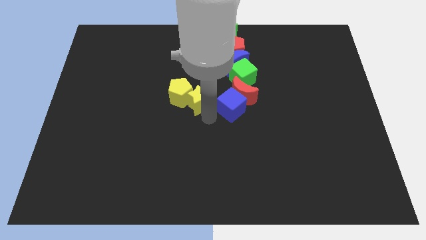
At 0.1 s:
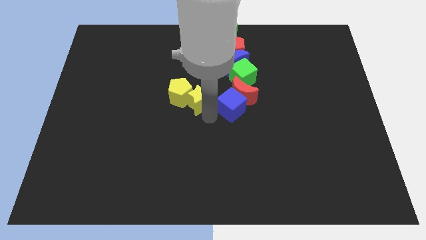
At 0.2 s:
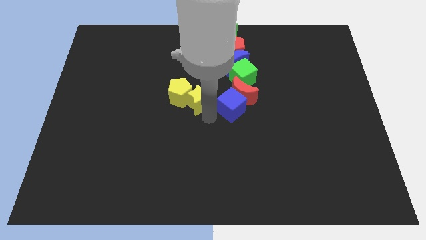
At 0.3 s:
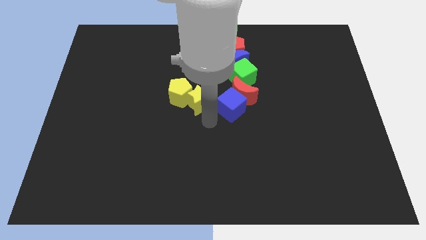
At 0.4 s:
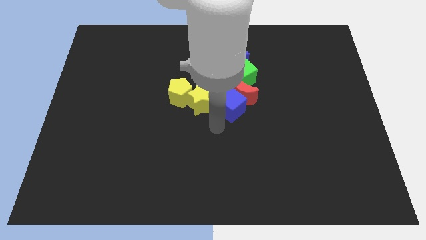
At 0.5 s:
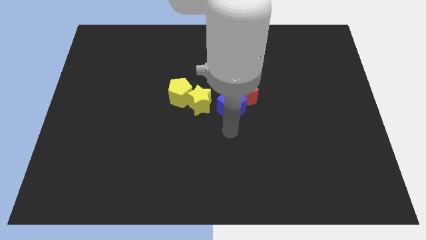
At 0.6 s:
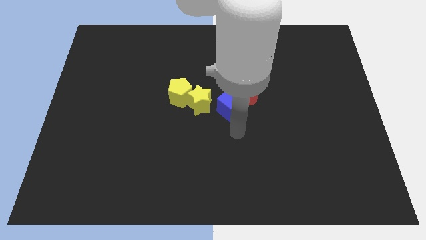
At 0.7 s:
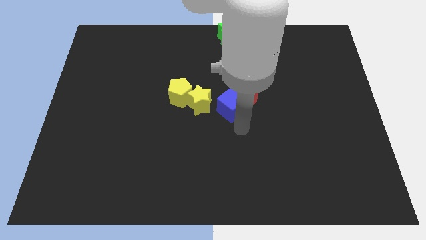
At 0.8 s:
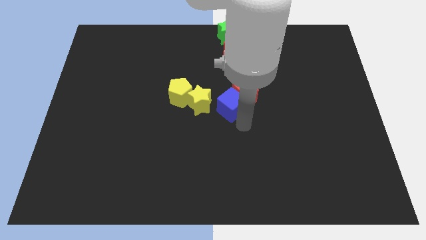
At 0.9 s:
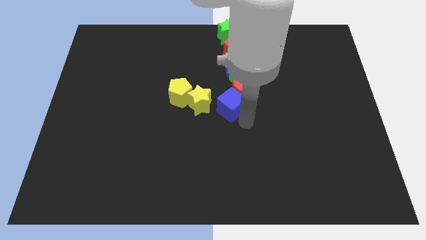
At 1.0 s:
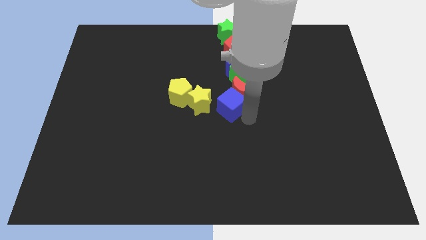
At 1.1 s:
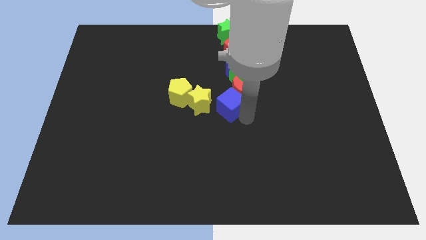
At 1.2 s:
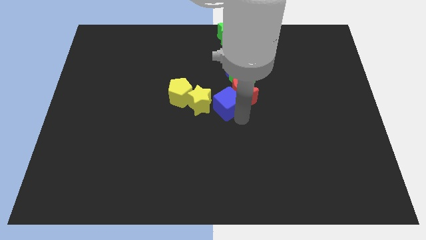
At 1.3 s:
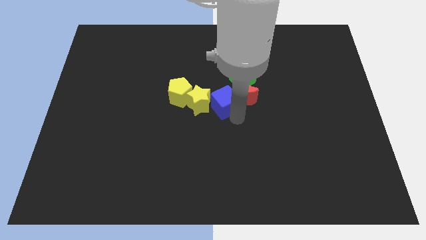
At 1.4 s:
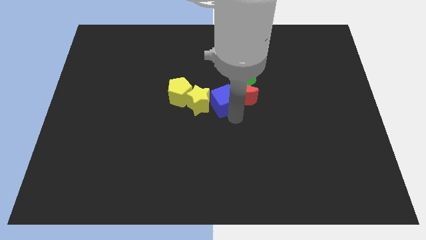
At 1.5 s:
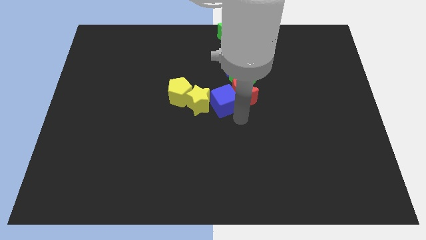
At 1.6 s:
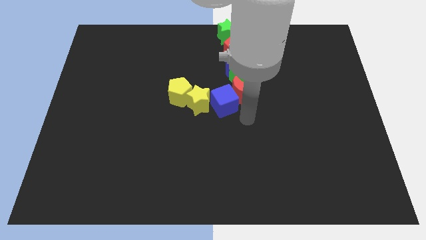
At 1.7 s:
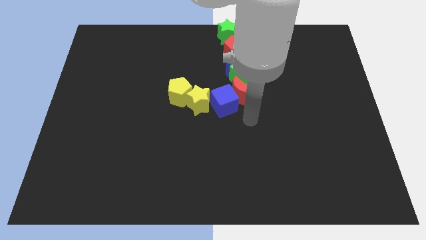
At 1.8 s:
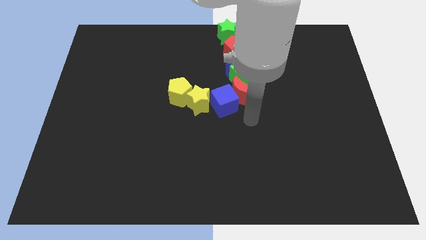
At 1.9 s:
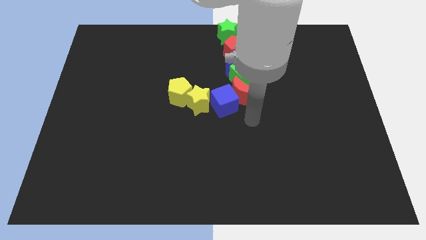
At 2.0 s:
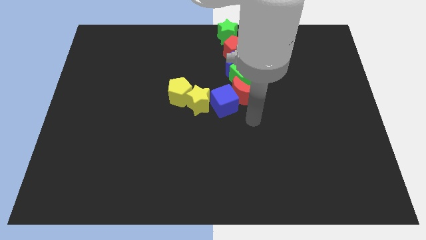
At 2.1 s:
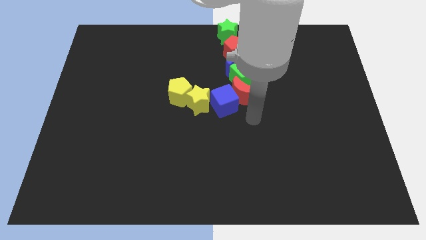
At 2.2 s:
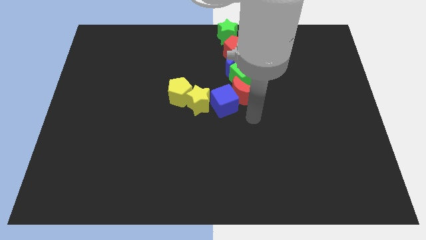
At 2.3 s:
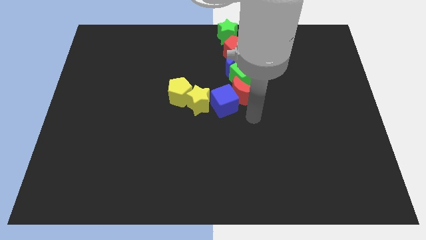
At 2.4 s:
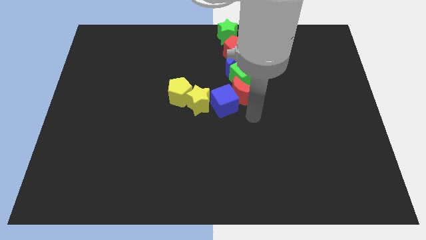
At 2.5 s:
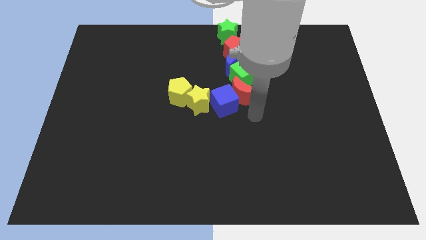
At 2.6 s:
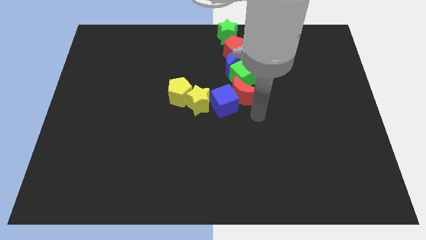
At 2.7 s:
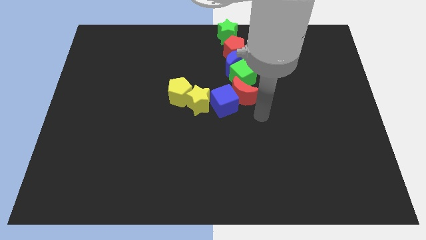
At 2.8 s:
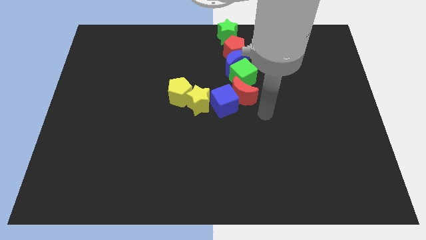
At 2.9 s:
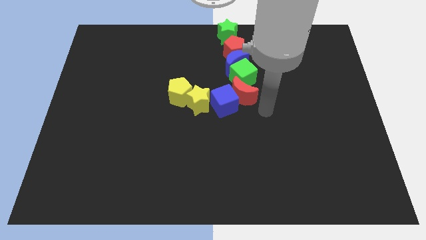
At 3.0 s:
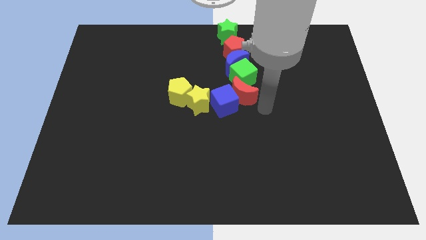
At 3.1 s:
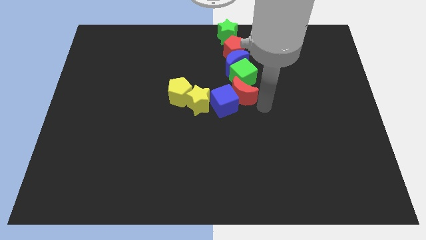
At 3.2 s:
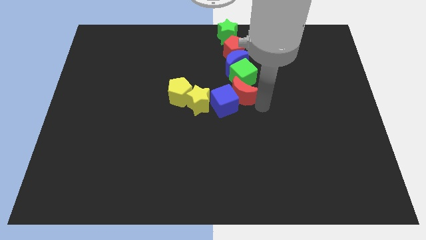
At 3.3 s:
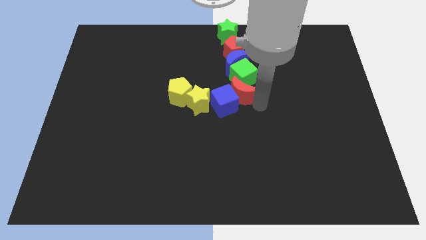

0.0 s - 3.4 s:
slightly push the blue cube to the top side

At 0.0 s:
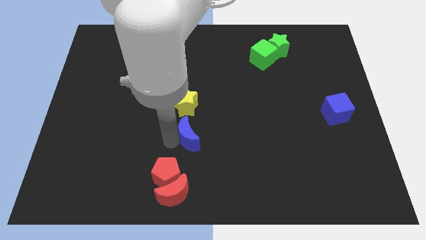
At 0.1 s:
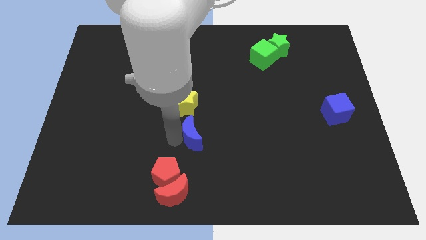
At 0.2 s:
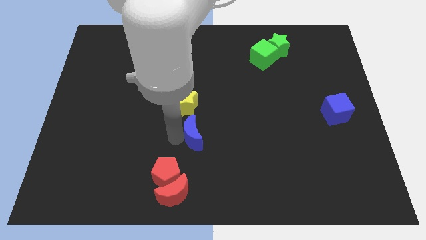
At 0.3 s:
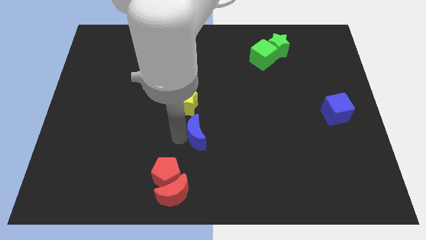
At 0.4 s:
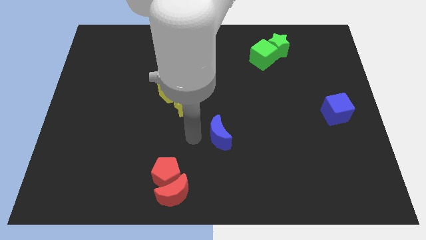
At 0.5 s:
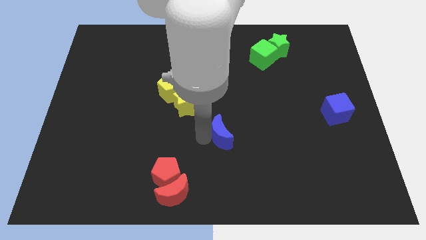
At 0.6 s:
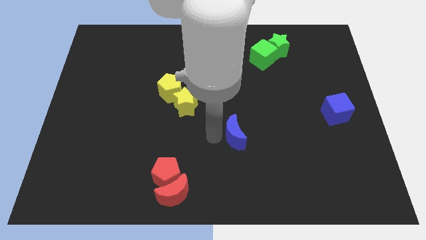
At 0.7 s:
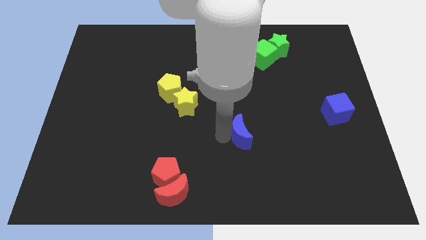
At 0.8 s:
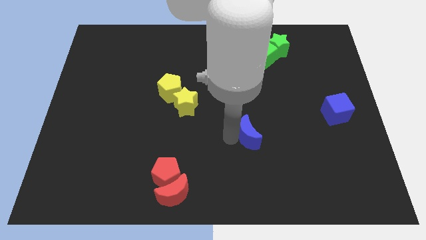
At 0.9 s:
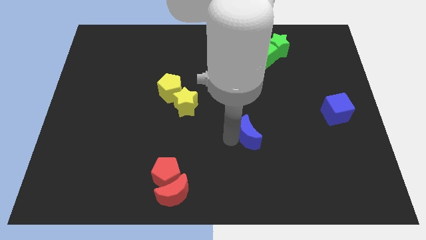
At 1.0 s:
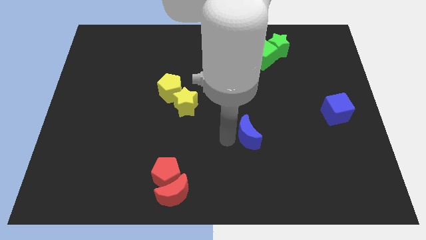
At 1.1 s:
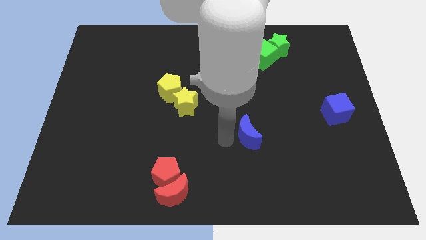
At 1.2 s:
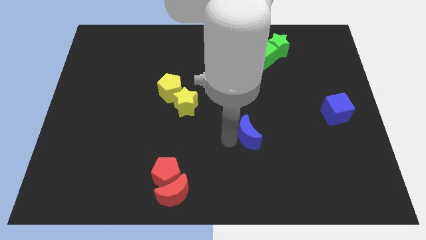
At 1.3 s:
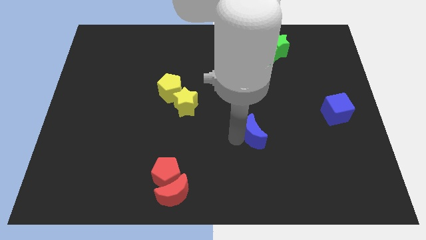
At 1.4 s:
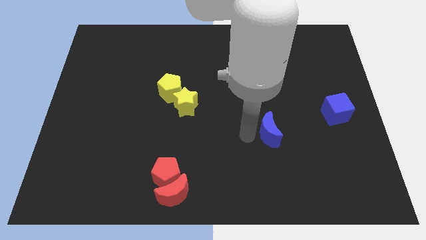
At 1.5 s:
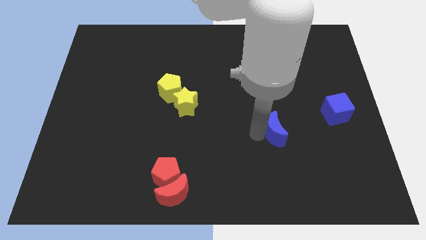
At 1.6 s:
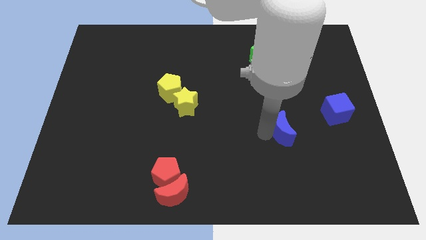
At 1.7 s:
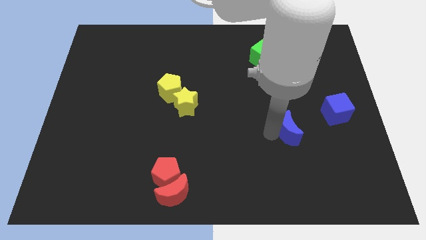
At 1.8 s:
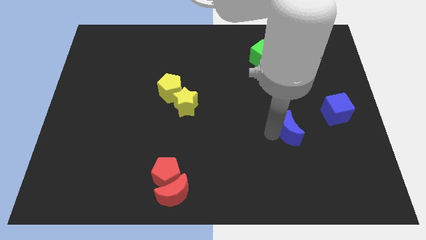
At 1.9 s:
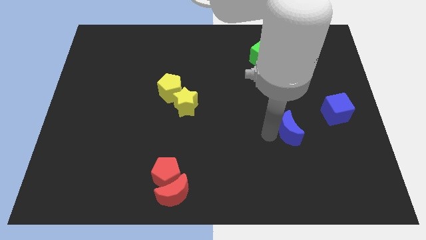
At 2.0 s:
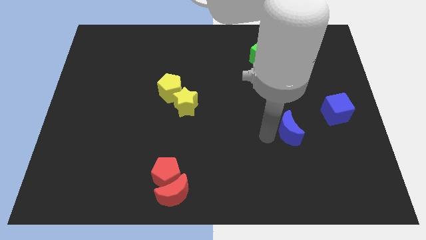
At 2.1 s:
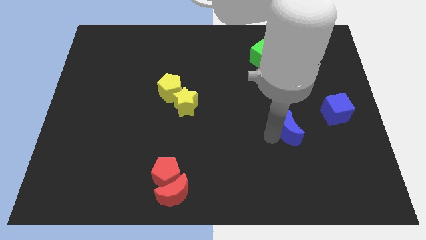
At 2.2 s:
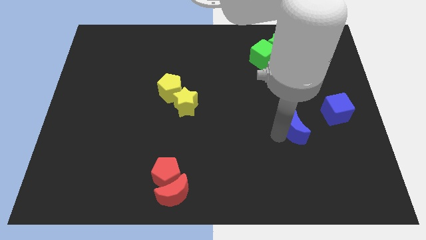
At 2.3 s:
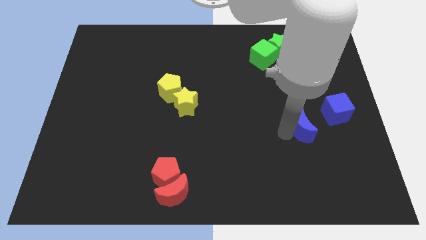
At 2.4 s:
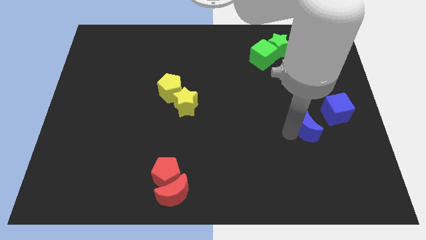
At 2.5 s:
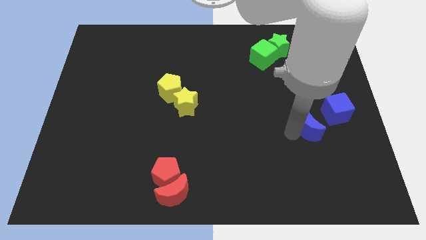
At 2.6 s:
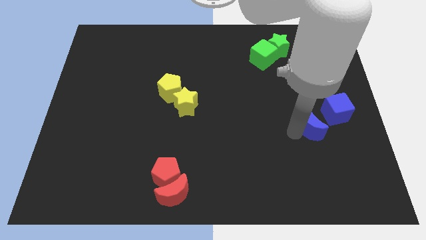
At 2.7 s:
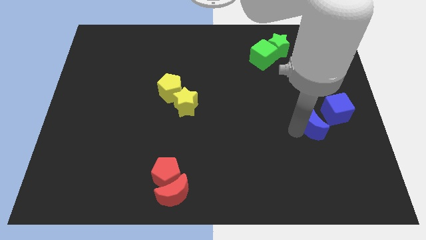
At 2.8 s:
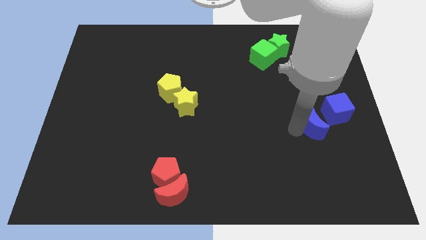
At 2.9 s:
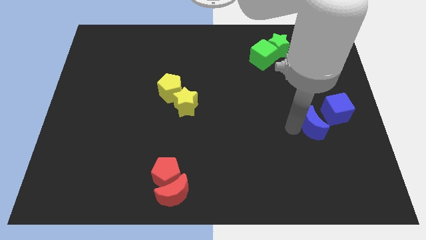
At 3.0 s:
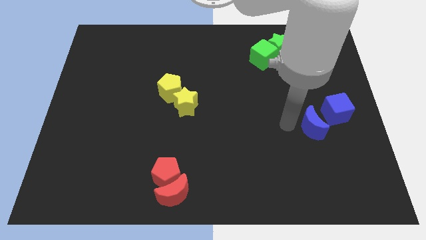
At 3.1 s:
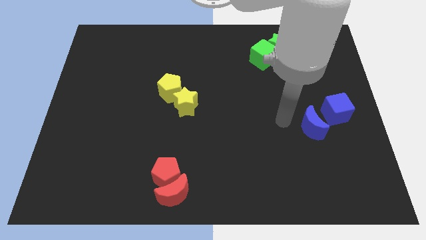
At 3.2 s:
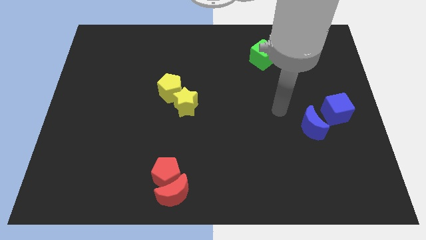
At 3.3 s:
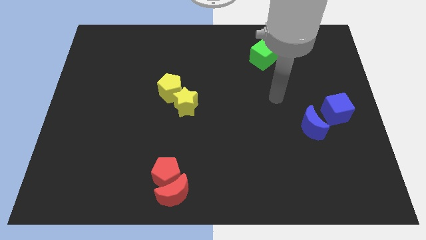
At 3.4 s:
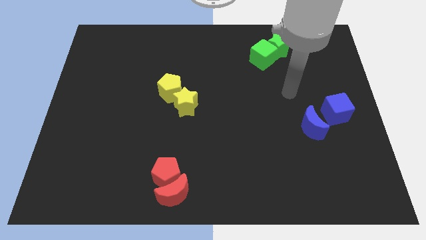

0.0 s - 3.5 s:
move the blue moon close to the blue cube

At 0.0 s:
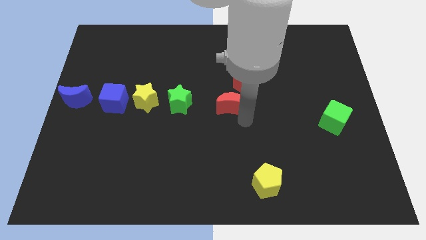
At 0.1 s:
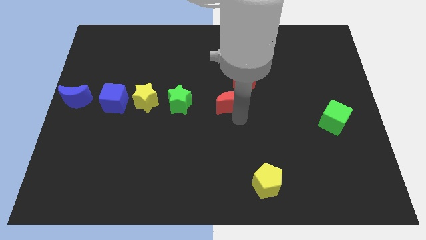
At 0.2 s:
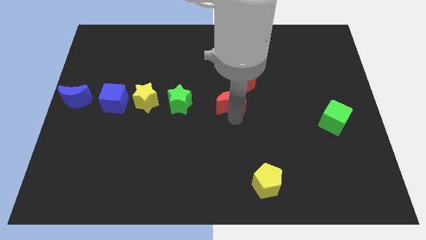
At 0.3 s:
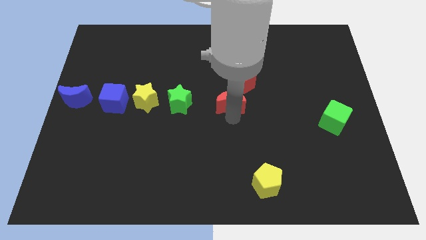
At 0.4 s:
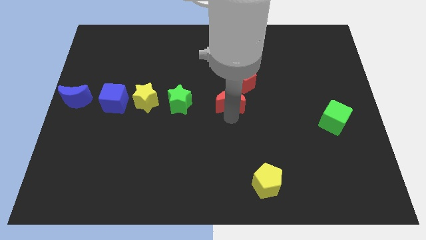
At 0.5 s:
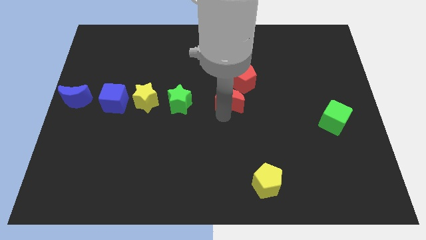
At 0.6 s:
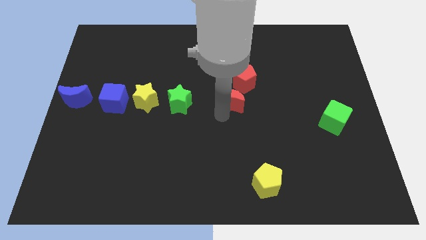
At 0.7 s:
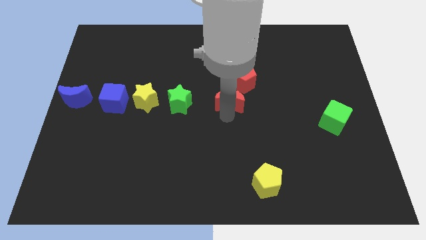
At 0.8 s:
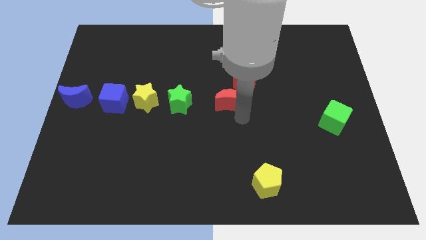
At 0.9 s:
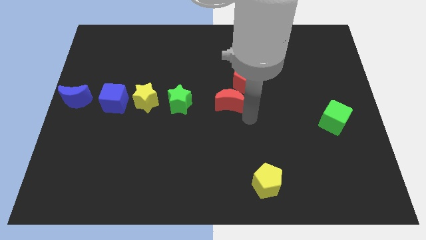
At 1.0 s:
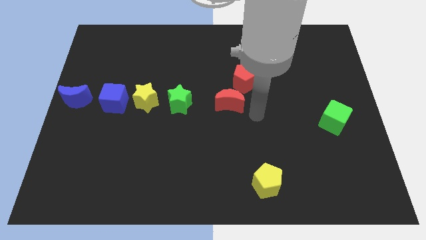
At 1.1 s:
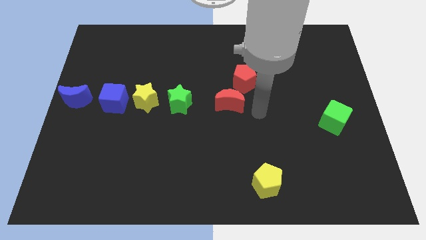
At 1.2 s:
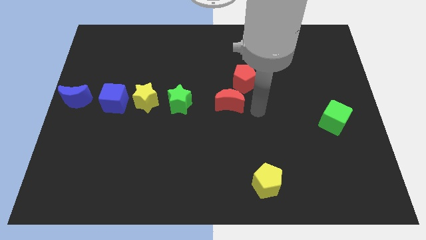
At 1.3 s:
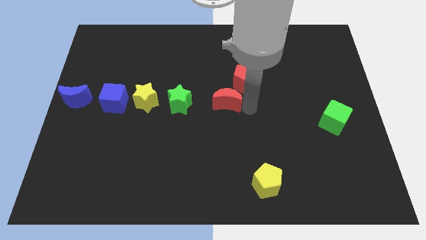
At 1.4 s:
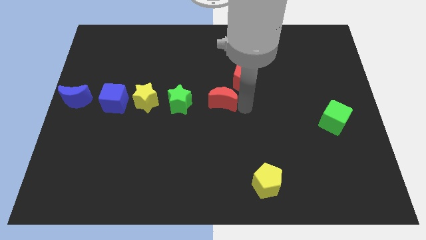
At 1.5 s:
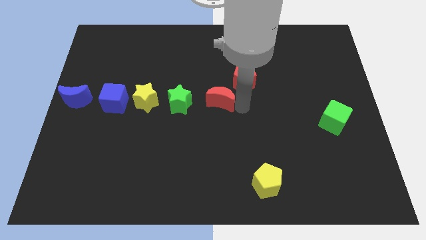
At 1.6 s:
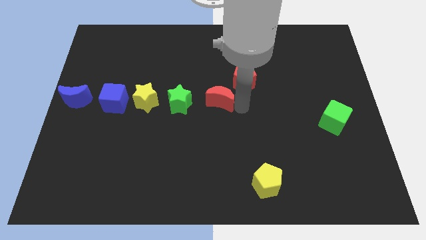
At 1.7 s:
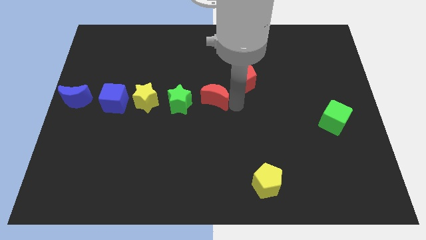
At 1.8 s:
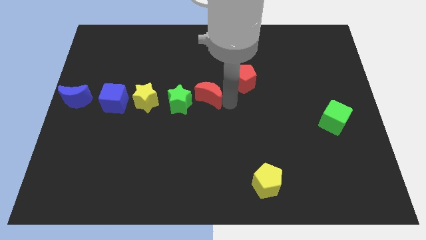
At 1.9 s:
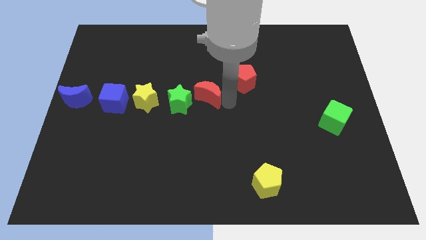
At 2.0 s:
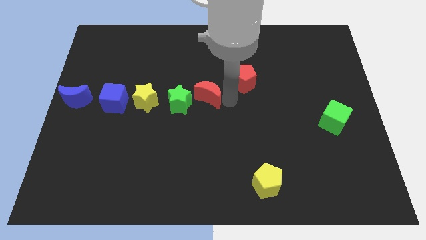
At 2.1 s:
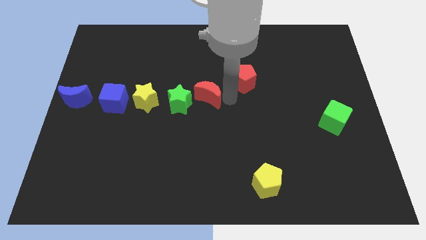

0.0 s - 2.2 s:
slide the red crescent on the left of the green star
